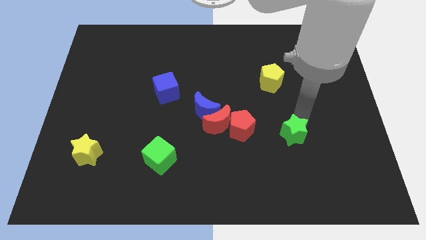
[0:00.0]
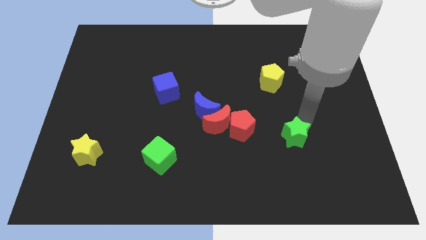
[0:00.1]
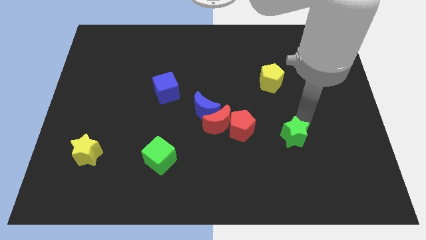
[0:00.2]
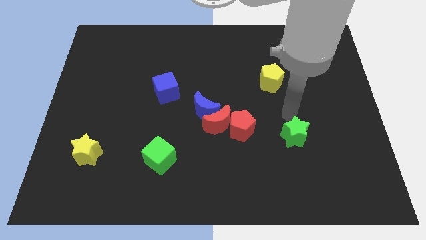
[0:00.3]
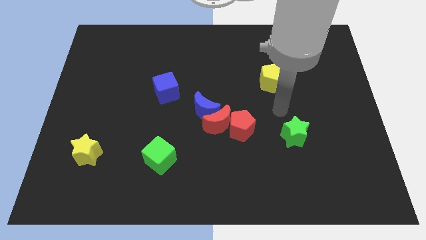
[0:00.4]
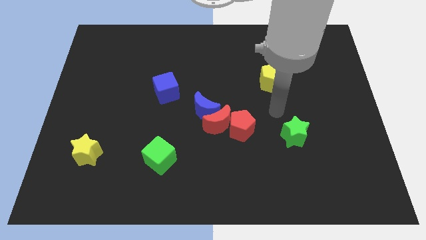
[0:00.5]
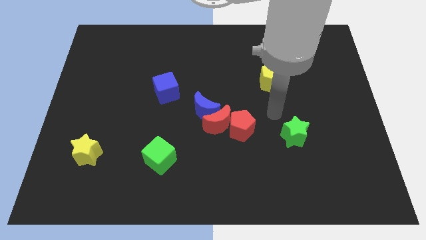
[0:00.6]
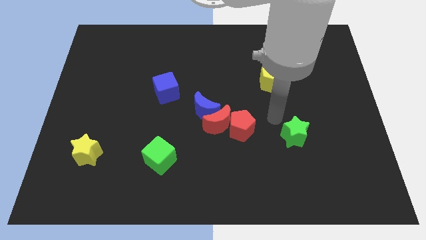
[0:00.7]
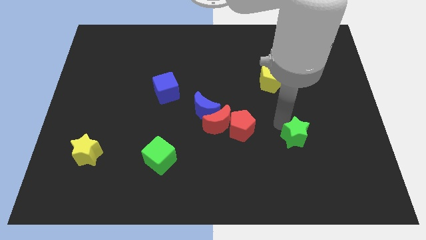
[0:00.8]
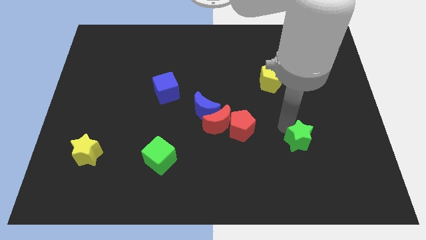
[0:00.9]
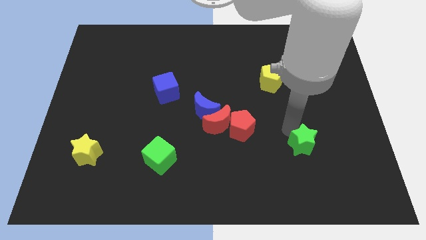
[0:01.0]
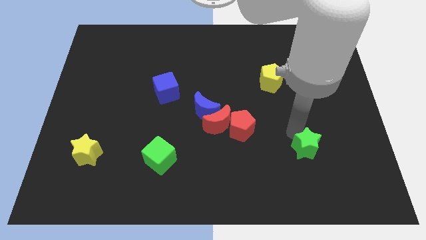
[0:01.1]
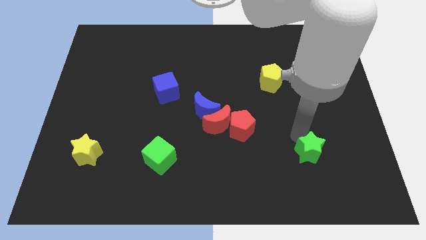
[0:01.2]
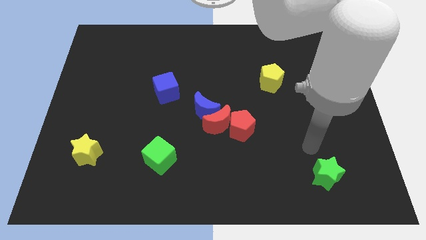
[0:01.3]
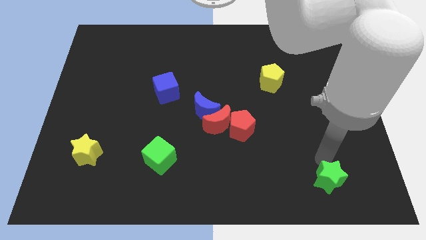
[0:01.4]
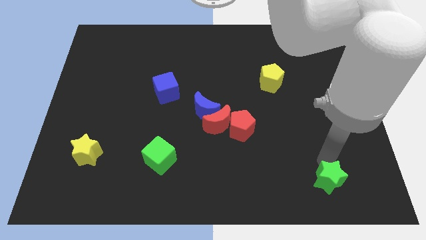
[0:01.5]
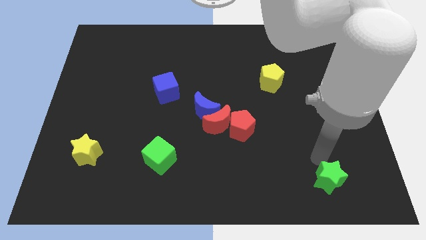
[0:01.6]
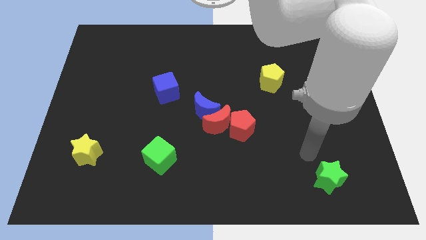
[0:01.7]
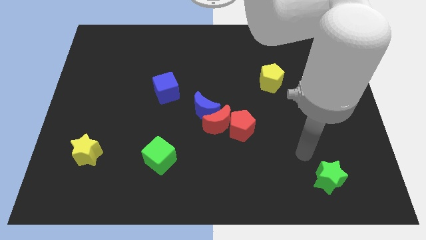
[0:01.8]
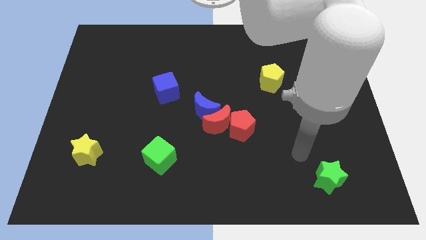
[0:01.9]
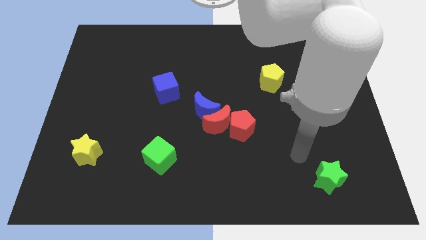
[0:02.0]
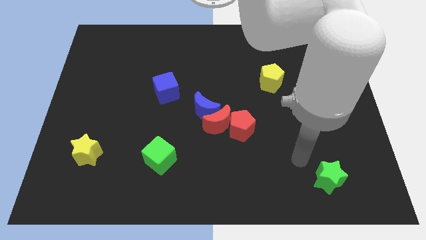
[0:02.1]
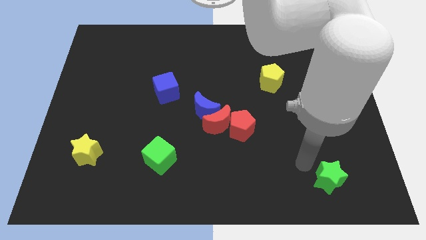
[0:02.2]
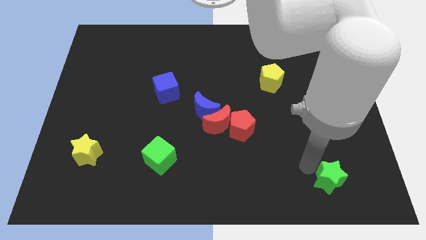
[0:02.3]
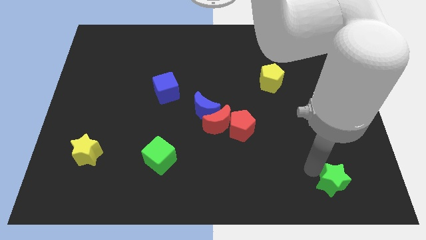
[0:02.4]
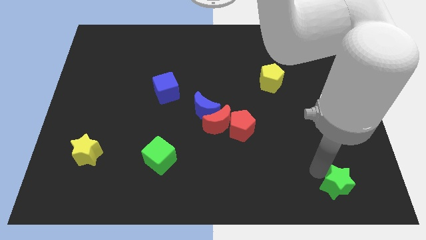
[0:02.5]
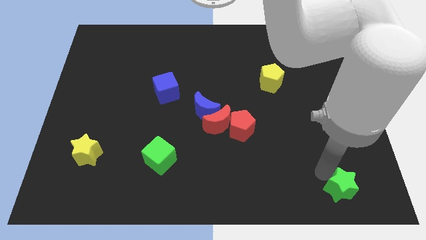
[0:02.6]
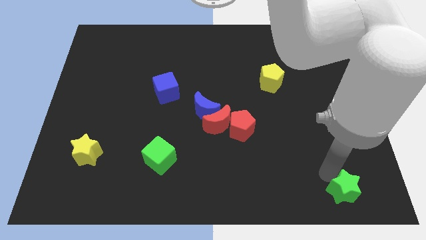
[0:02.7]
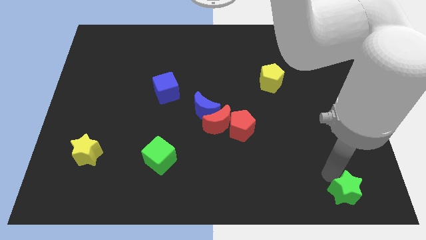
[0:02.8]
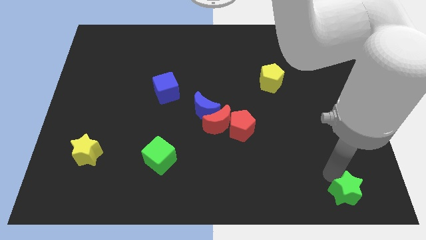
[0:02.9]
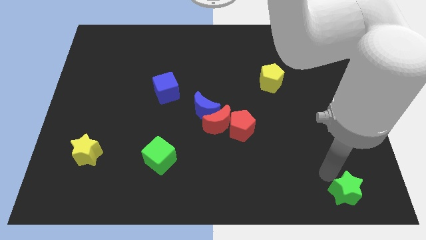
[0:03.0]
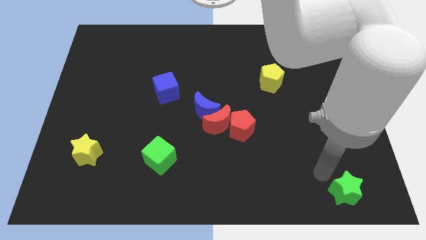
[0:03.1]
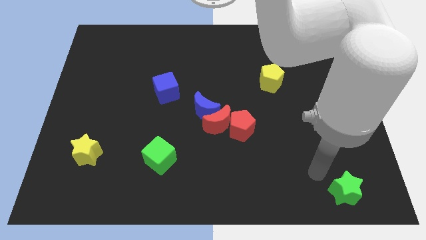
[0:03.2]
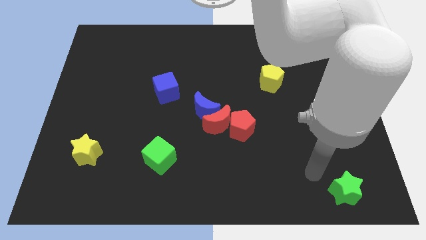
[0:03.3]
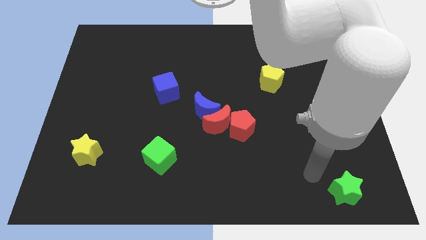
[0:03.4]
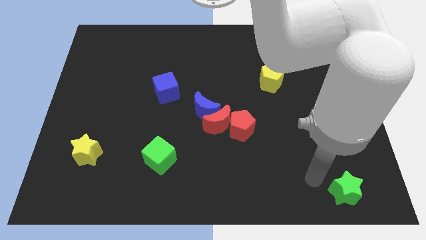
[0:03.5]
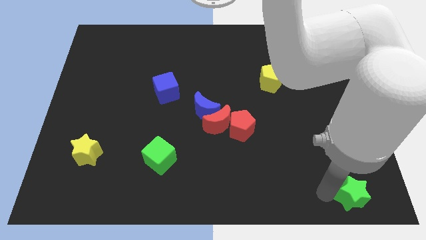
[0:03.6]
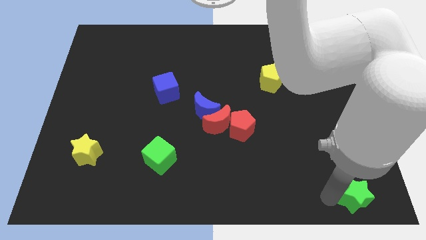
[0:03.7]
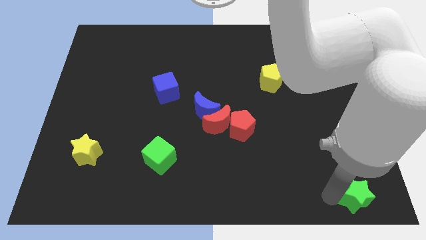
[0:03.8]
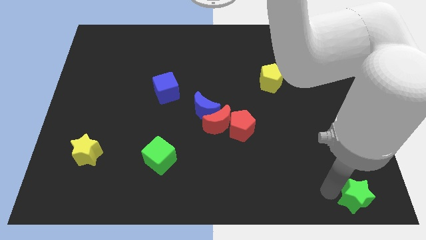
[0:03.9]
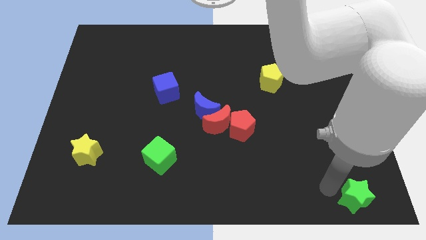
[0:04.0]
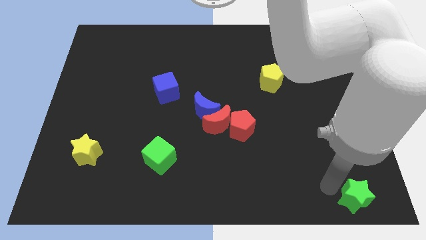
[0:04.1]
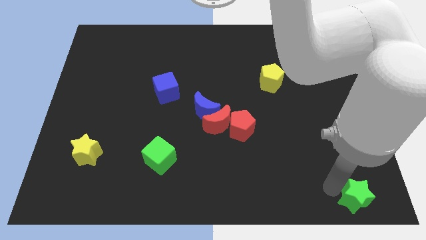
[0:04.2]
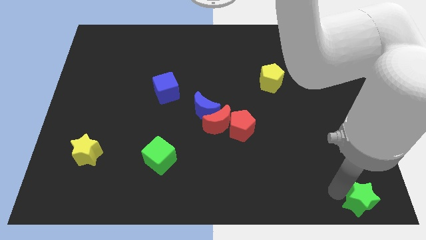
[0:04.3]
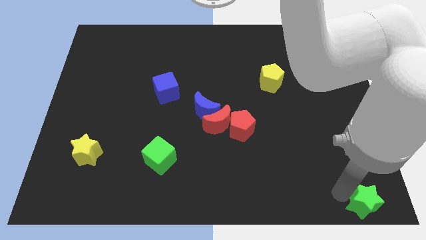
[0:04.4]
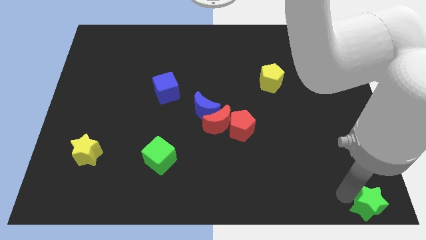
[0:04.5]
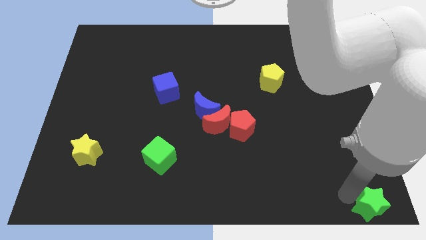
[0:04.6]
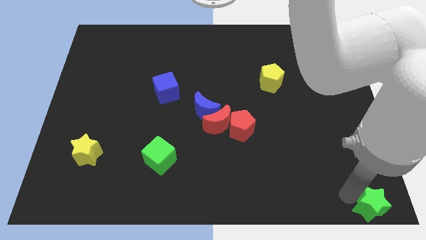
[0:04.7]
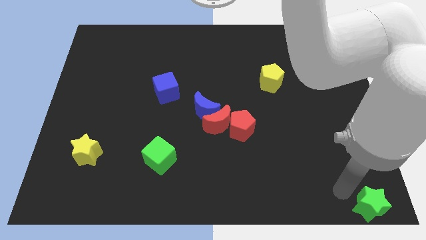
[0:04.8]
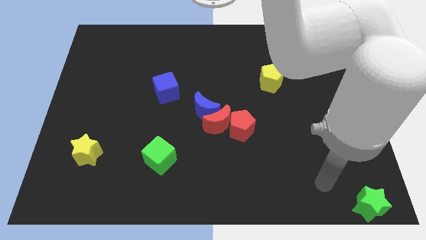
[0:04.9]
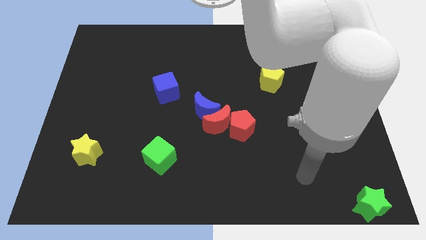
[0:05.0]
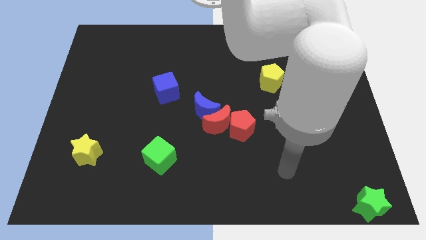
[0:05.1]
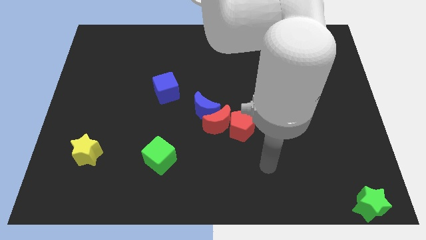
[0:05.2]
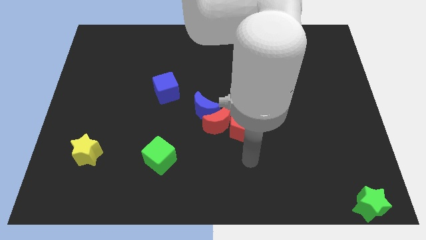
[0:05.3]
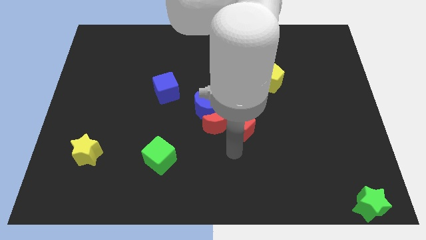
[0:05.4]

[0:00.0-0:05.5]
move the green star towards the bottom right corner of the board

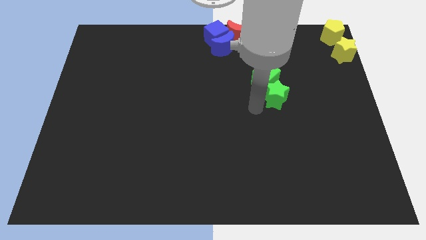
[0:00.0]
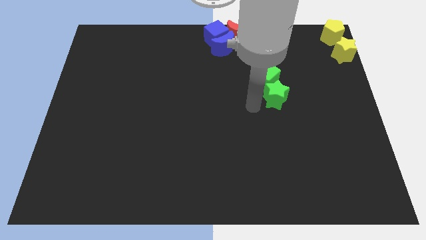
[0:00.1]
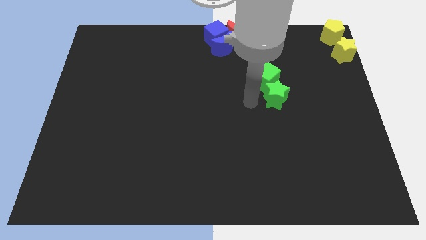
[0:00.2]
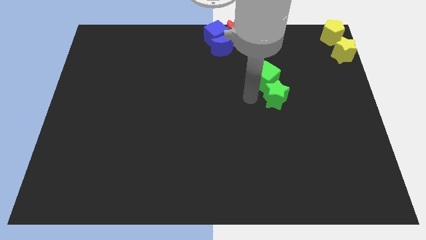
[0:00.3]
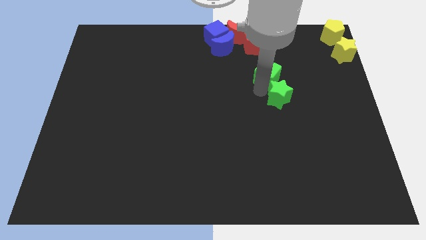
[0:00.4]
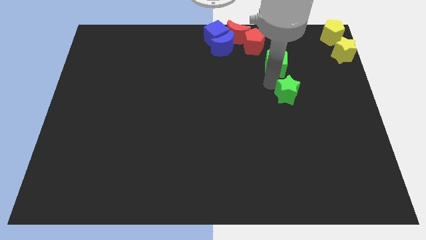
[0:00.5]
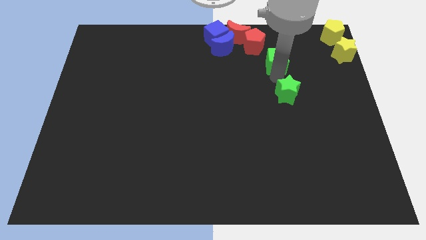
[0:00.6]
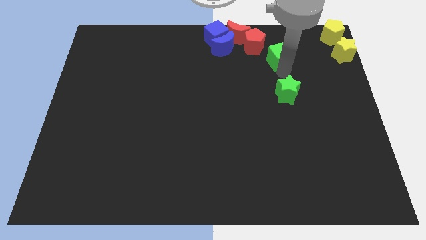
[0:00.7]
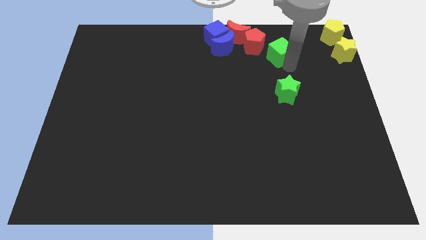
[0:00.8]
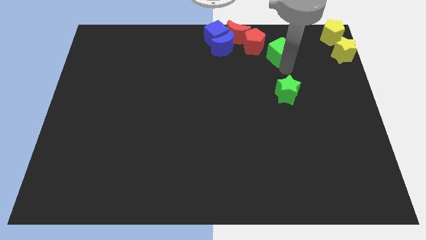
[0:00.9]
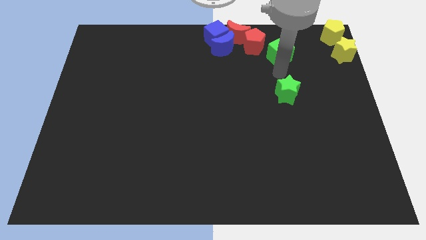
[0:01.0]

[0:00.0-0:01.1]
push the green cube away from the green star

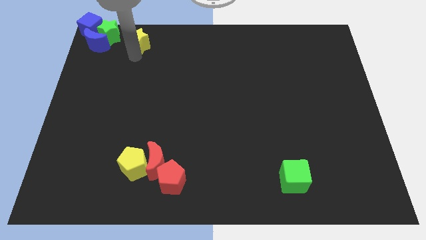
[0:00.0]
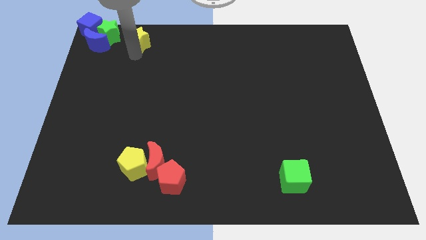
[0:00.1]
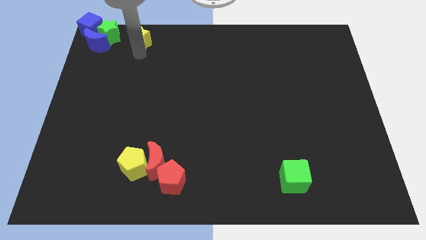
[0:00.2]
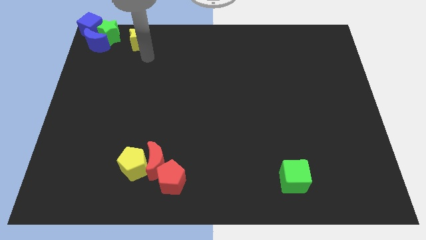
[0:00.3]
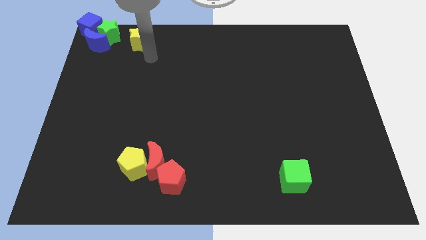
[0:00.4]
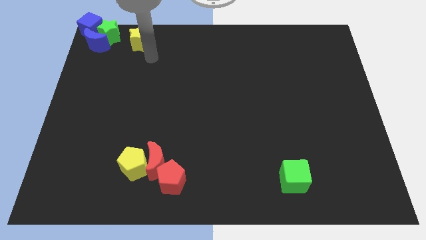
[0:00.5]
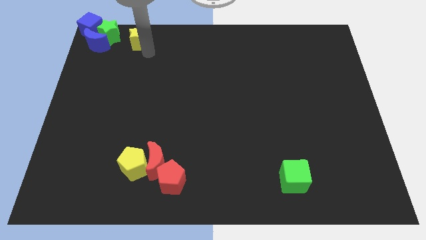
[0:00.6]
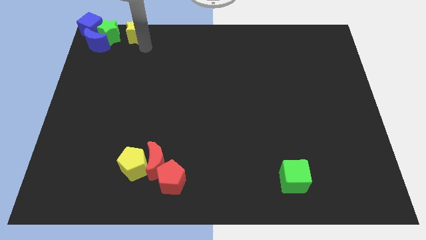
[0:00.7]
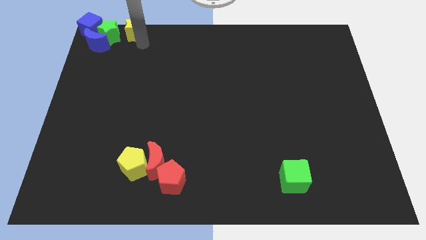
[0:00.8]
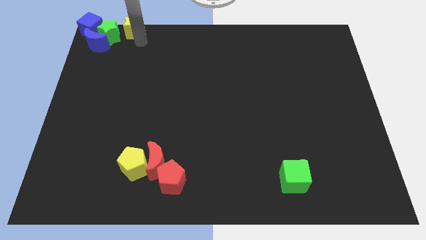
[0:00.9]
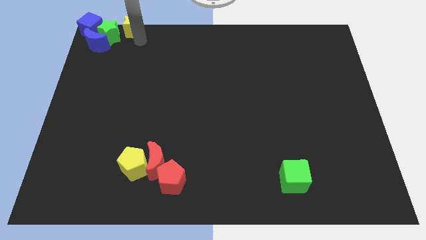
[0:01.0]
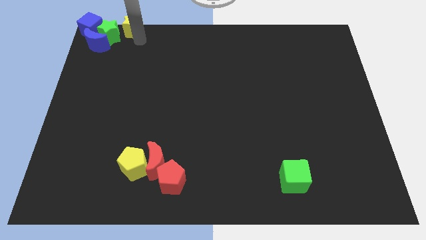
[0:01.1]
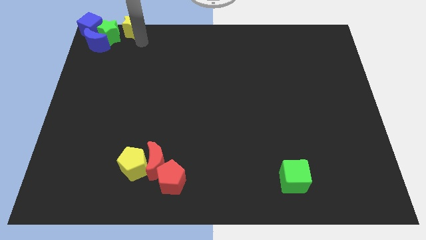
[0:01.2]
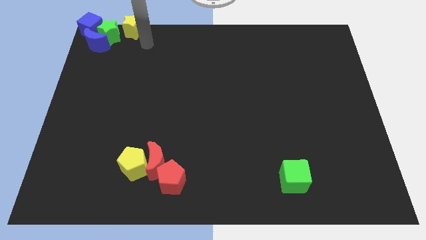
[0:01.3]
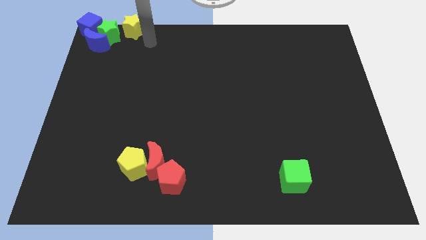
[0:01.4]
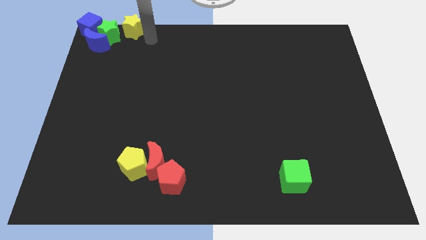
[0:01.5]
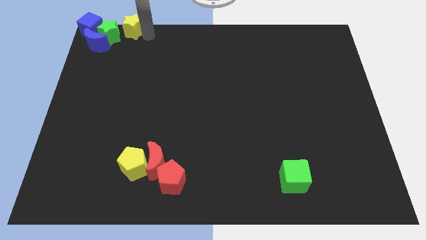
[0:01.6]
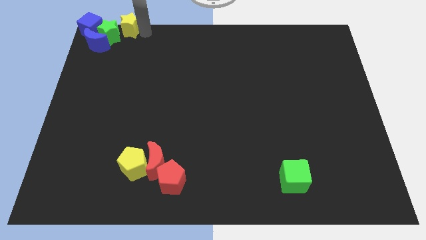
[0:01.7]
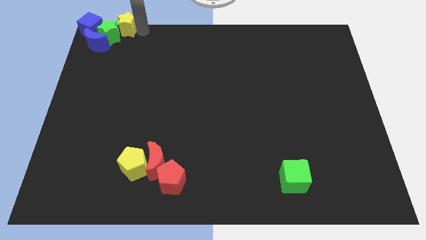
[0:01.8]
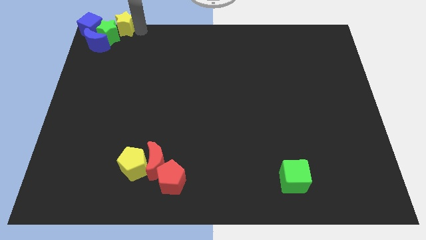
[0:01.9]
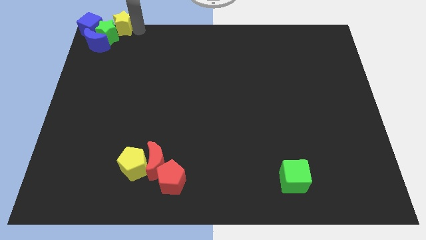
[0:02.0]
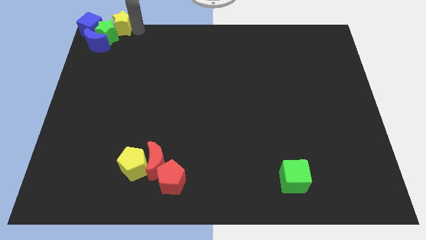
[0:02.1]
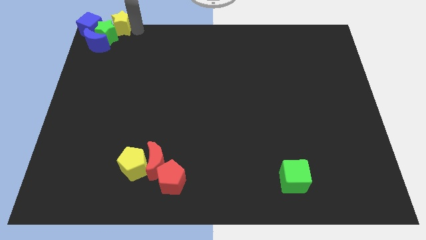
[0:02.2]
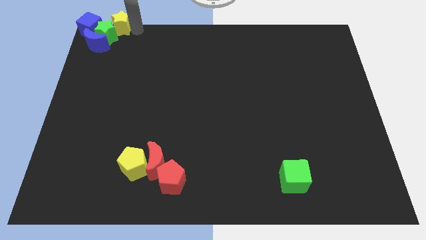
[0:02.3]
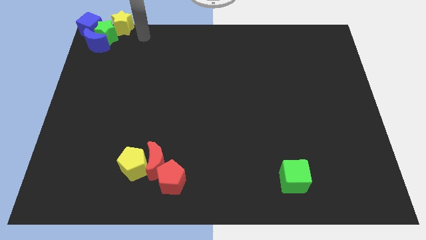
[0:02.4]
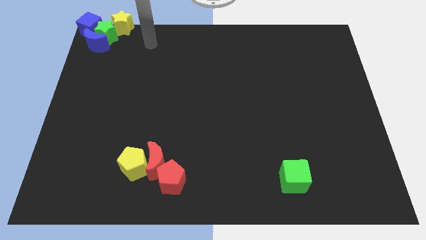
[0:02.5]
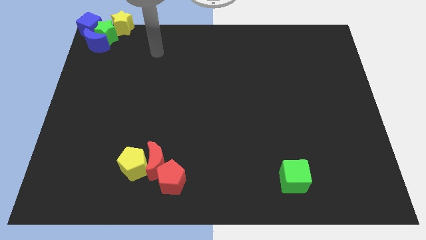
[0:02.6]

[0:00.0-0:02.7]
push the yellow star into the group of blocks
